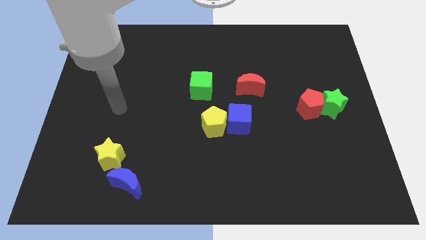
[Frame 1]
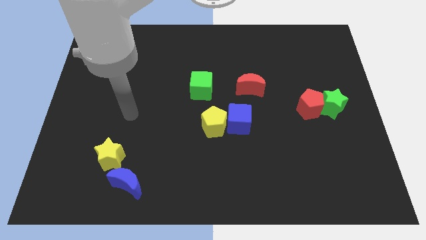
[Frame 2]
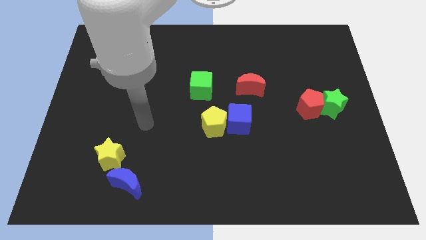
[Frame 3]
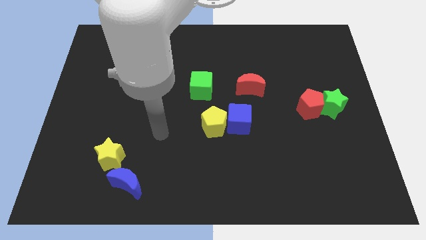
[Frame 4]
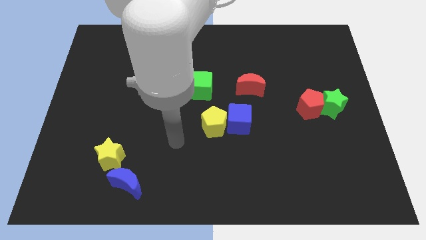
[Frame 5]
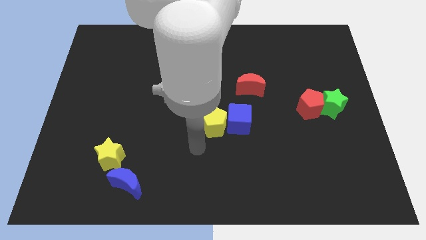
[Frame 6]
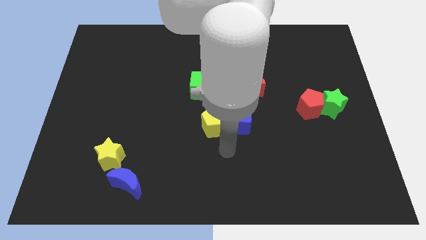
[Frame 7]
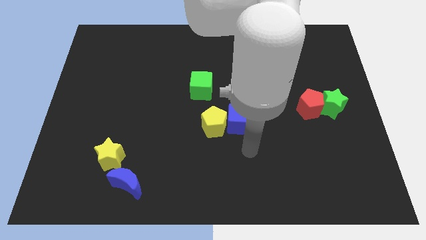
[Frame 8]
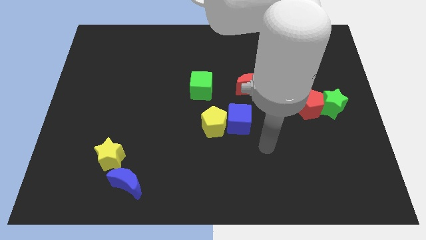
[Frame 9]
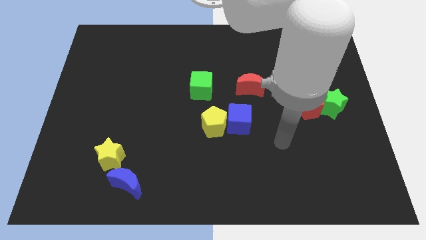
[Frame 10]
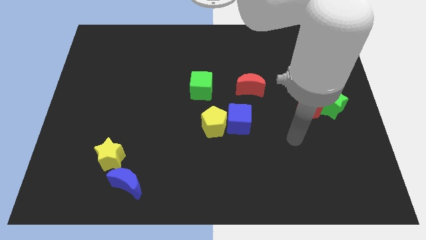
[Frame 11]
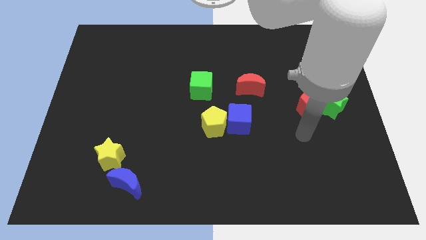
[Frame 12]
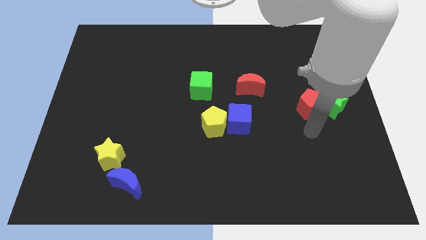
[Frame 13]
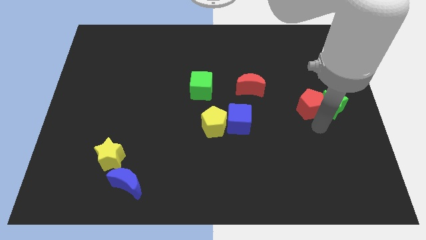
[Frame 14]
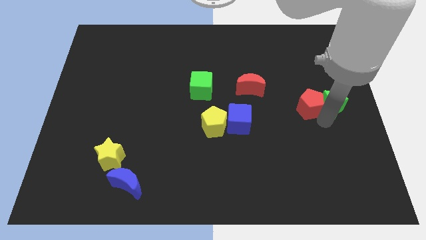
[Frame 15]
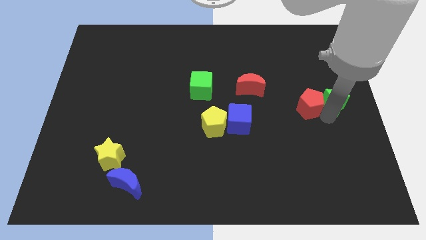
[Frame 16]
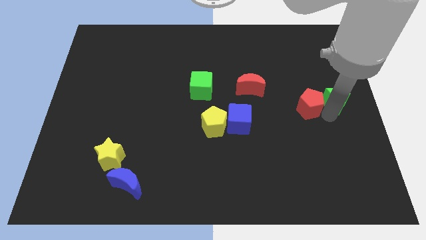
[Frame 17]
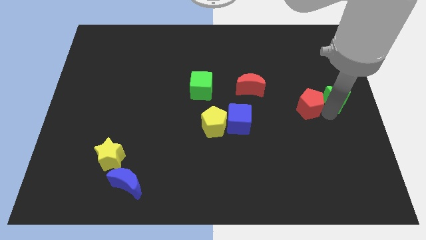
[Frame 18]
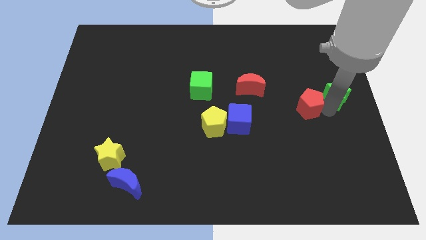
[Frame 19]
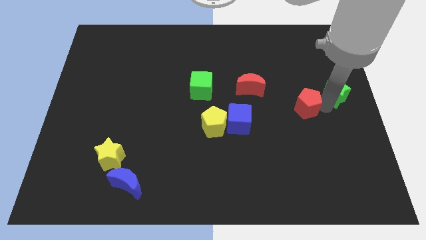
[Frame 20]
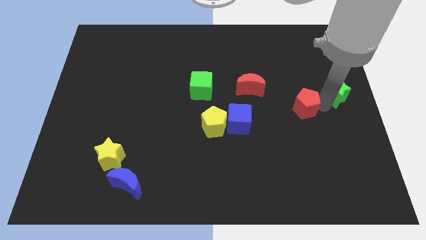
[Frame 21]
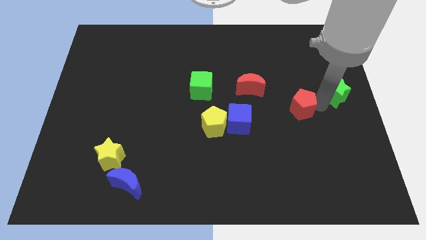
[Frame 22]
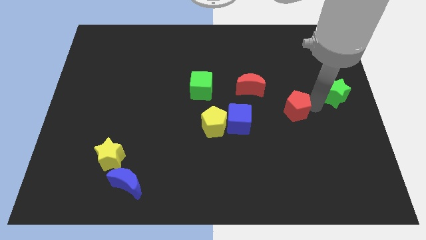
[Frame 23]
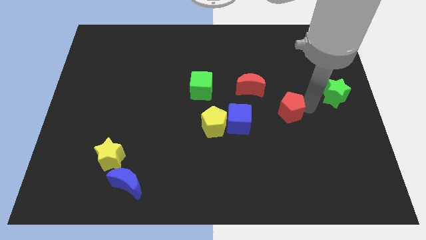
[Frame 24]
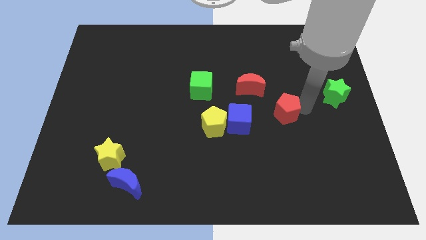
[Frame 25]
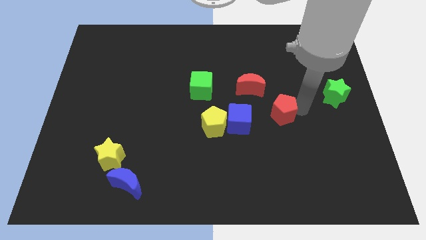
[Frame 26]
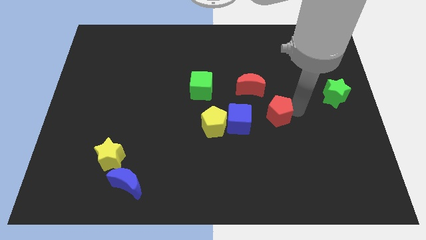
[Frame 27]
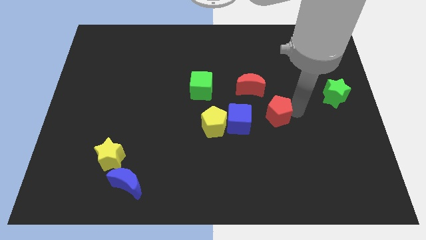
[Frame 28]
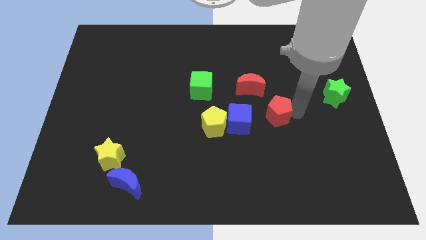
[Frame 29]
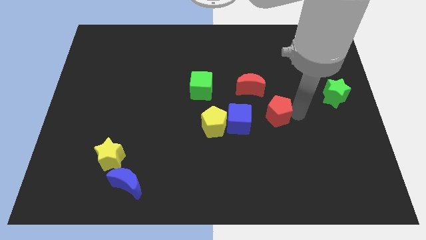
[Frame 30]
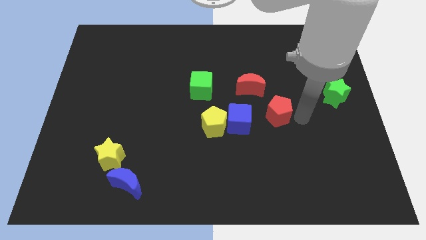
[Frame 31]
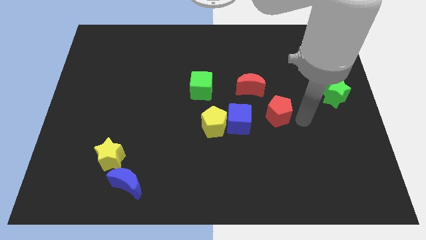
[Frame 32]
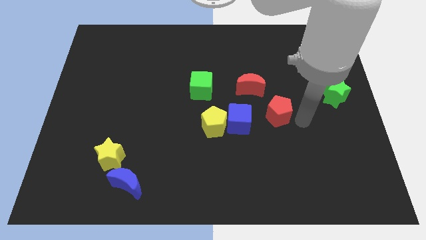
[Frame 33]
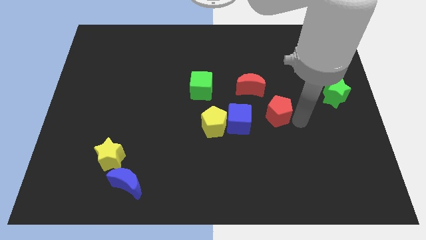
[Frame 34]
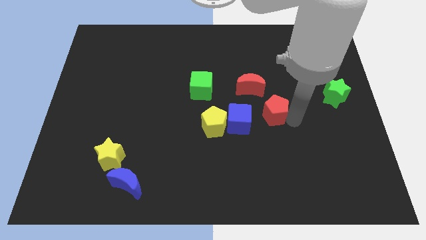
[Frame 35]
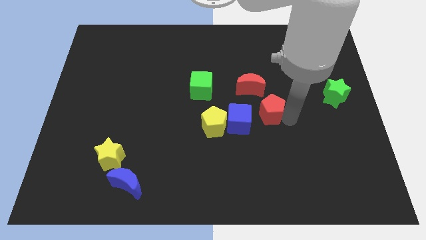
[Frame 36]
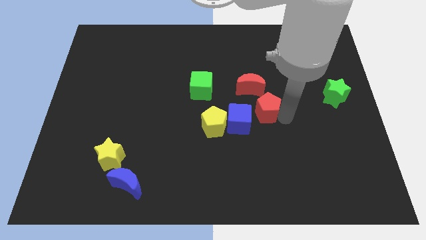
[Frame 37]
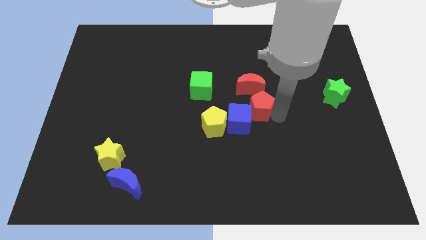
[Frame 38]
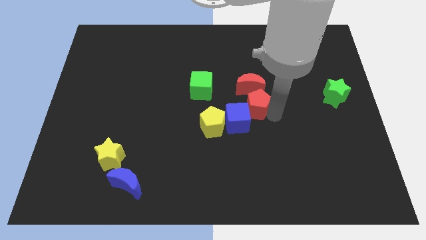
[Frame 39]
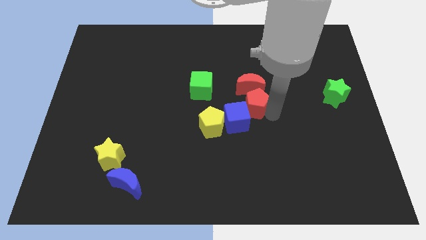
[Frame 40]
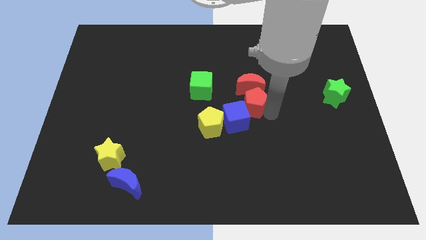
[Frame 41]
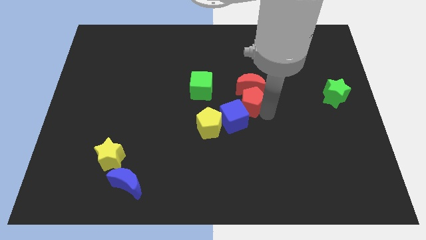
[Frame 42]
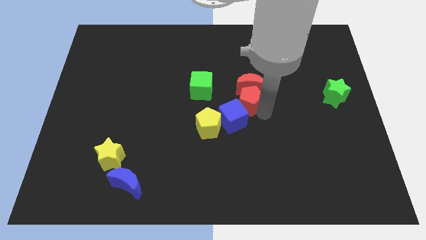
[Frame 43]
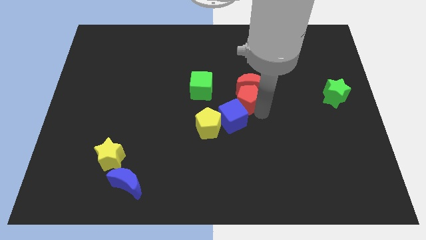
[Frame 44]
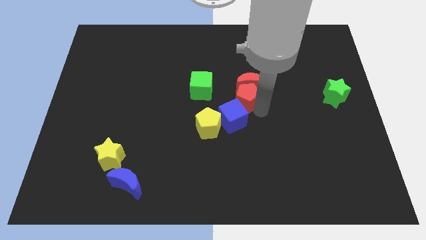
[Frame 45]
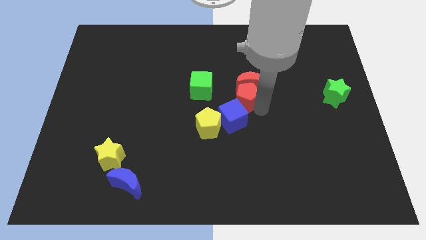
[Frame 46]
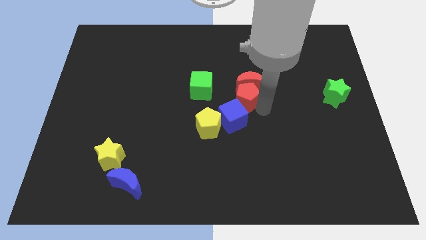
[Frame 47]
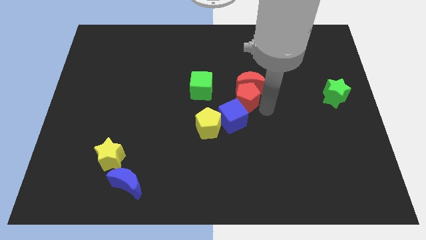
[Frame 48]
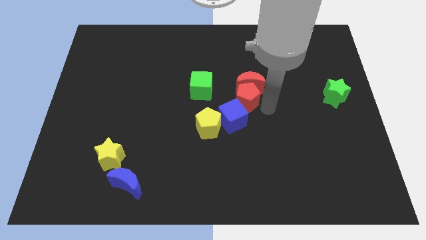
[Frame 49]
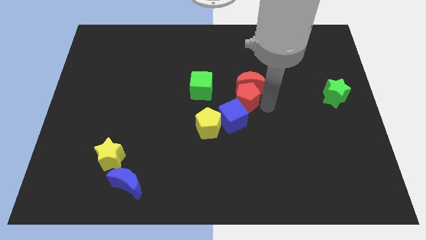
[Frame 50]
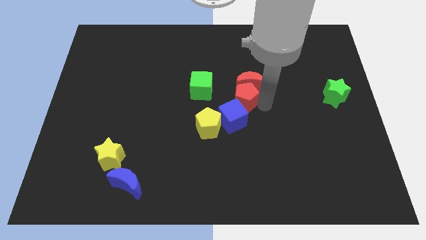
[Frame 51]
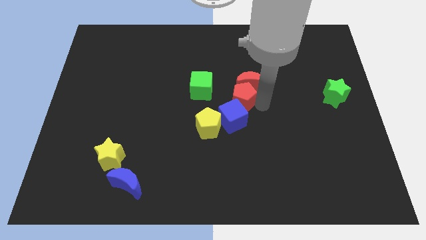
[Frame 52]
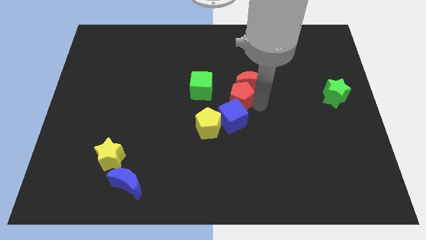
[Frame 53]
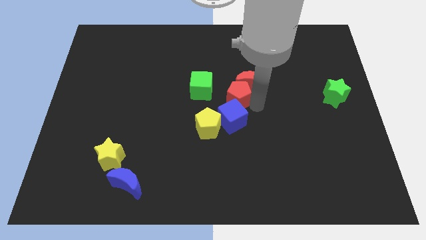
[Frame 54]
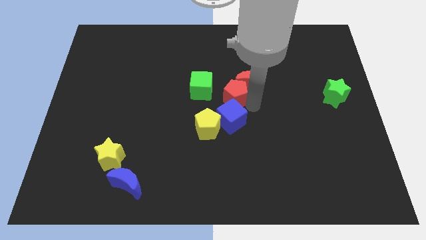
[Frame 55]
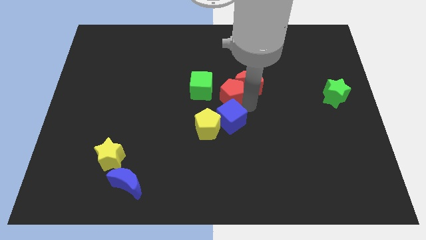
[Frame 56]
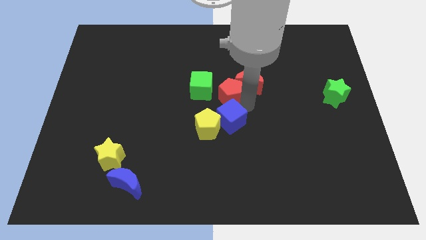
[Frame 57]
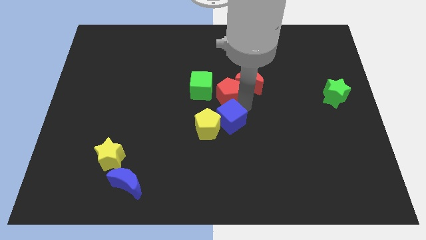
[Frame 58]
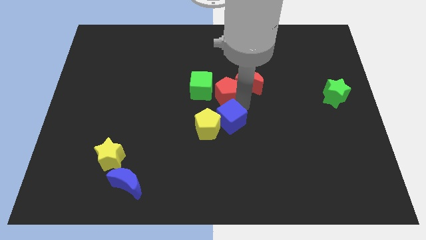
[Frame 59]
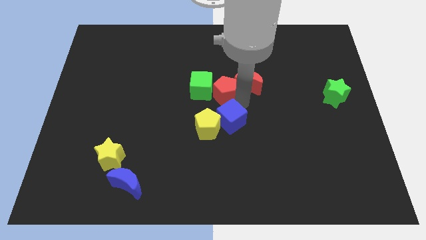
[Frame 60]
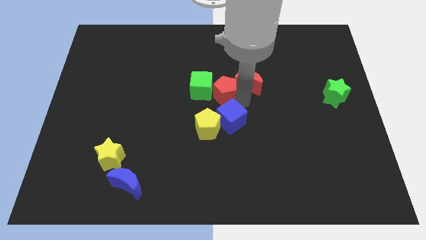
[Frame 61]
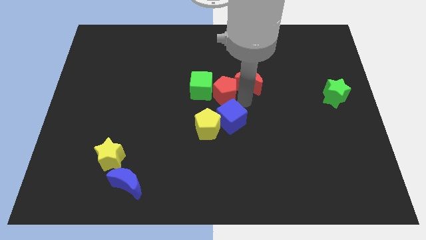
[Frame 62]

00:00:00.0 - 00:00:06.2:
slide the red pentagon close to the green cube

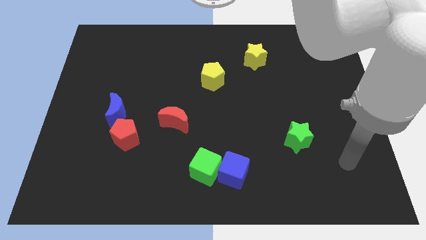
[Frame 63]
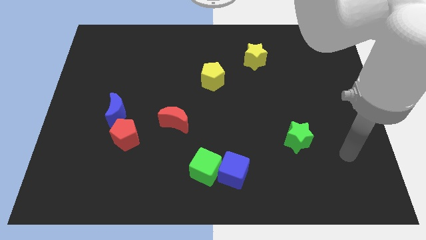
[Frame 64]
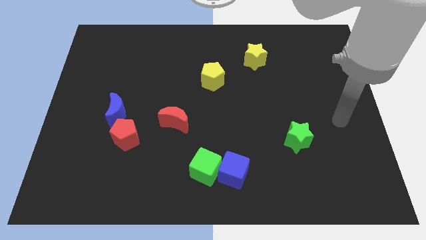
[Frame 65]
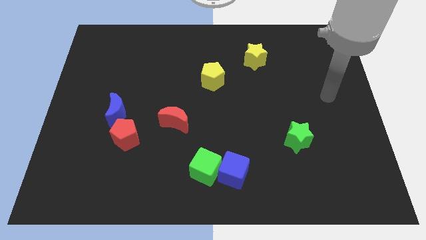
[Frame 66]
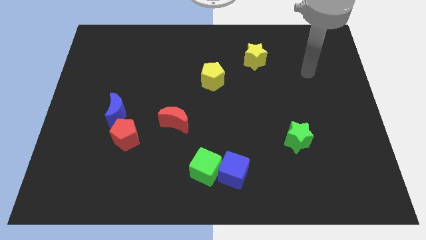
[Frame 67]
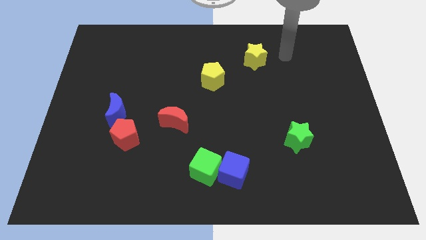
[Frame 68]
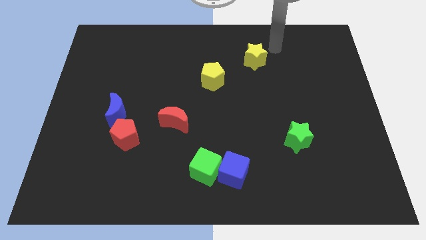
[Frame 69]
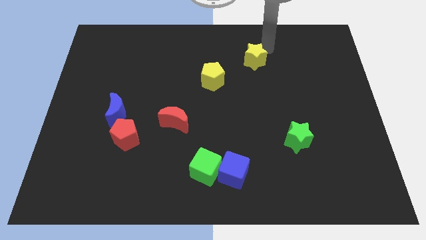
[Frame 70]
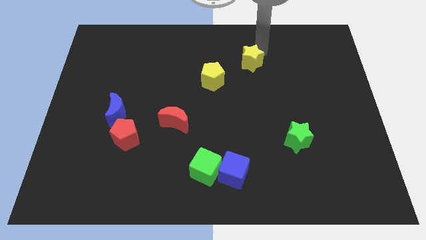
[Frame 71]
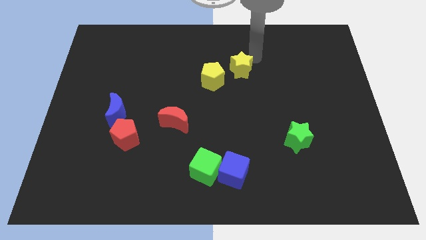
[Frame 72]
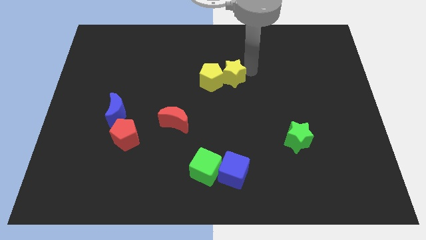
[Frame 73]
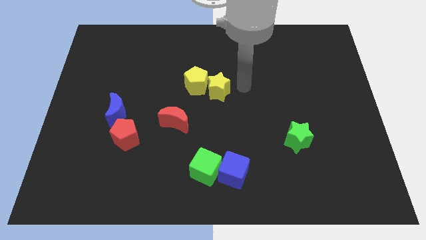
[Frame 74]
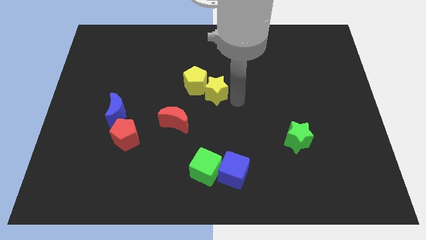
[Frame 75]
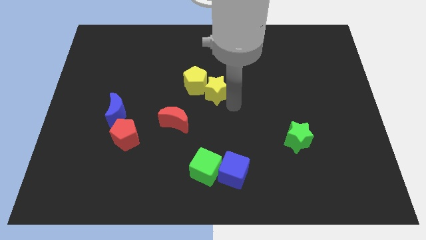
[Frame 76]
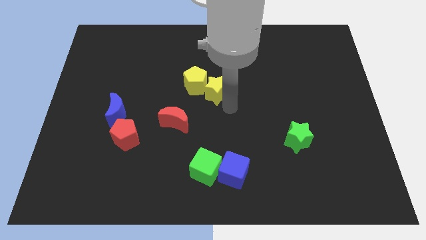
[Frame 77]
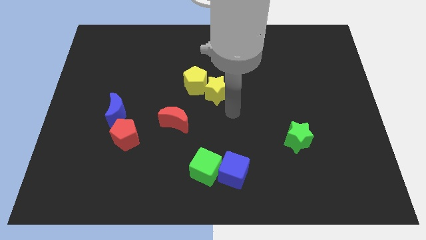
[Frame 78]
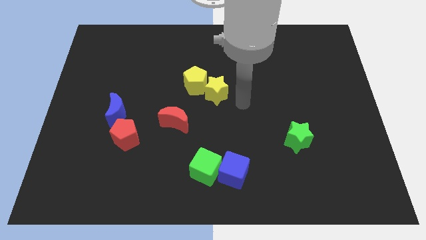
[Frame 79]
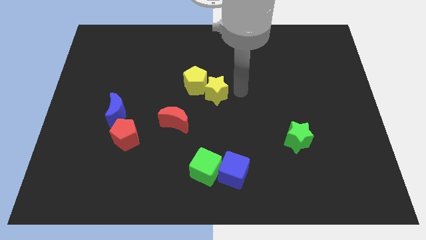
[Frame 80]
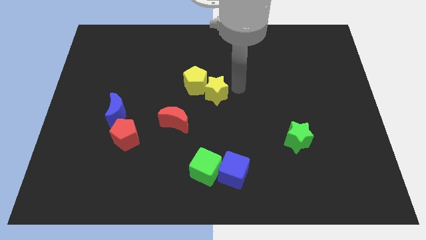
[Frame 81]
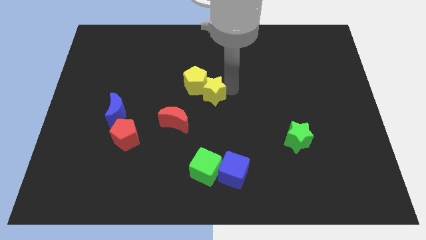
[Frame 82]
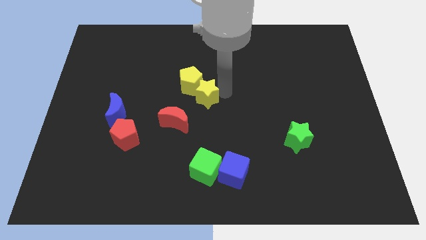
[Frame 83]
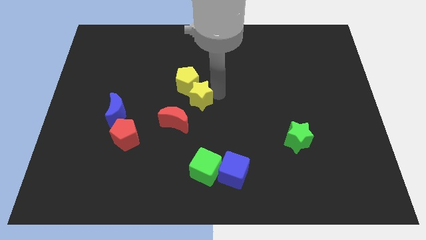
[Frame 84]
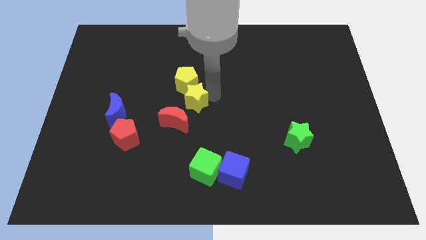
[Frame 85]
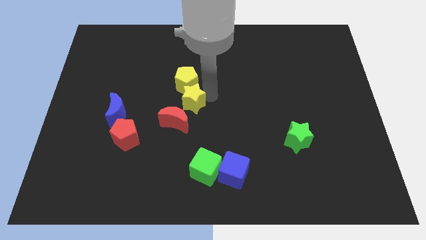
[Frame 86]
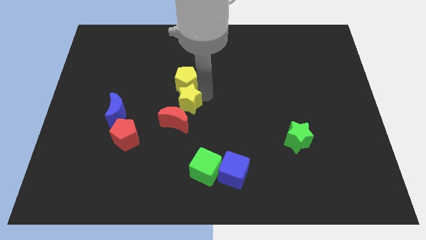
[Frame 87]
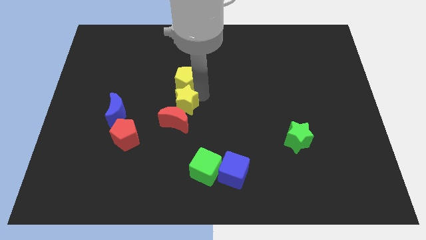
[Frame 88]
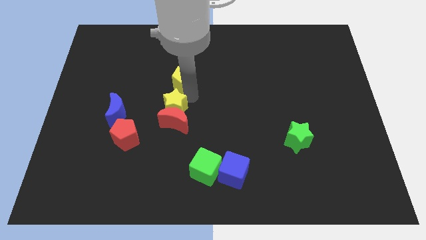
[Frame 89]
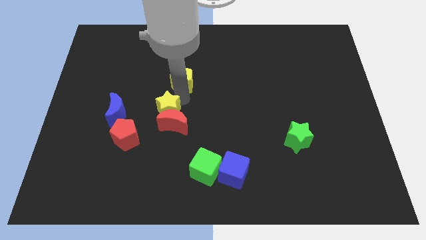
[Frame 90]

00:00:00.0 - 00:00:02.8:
move the yellow star next to the red moon
